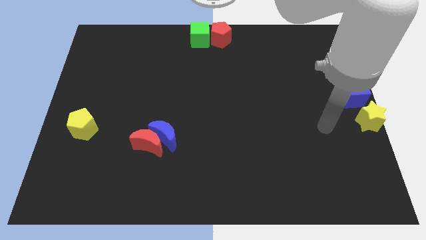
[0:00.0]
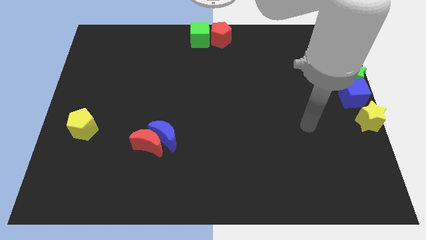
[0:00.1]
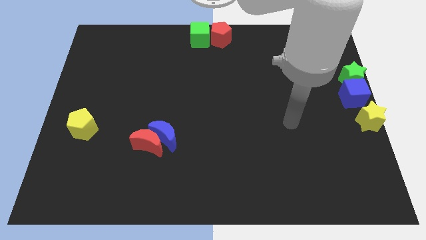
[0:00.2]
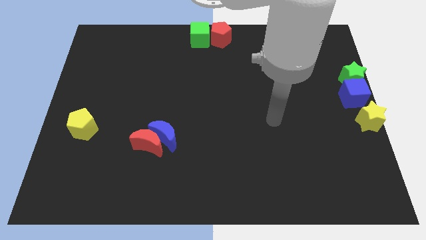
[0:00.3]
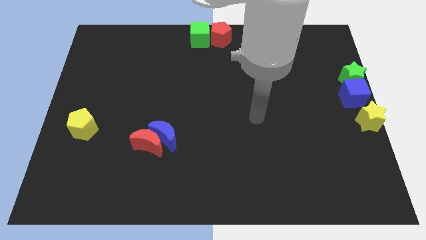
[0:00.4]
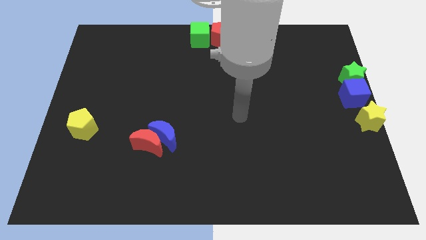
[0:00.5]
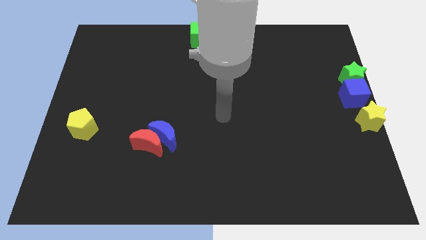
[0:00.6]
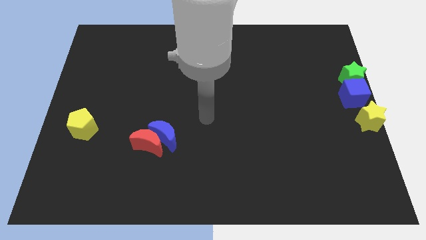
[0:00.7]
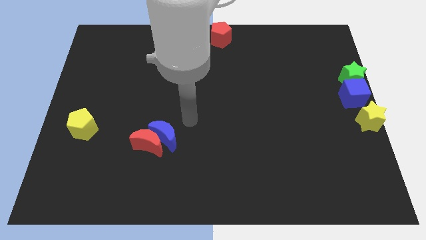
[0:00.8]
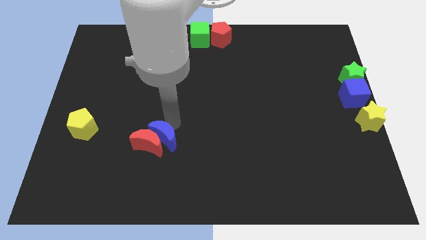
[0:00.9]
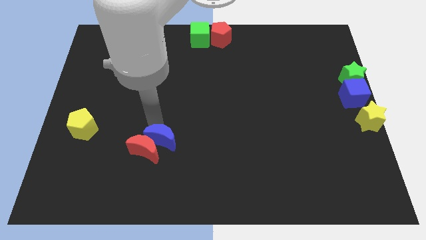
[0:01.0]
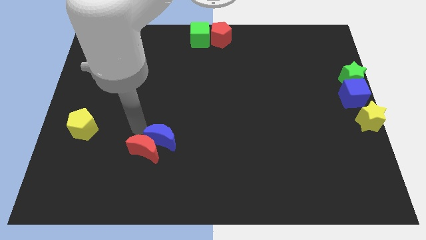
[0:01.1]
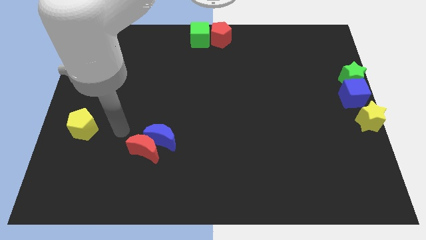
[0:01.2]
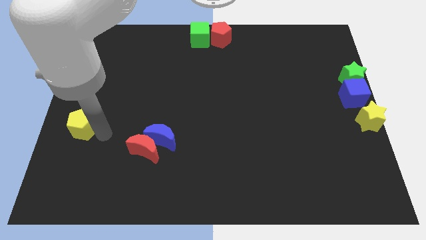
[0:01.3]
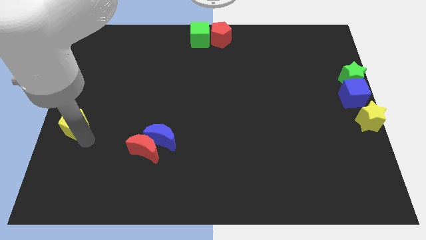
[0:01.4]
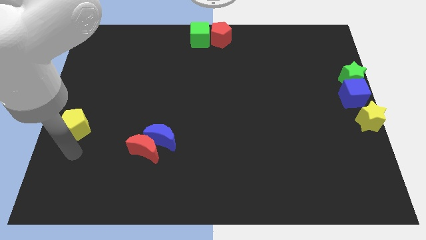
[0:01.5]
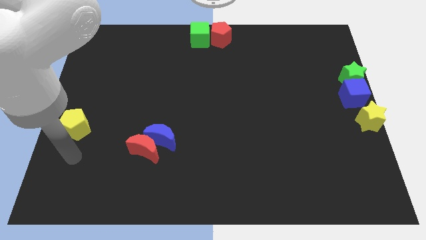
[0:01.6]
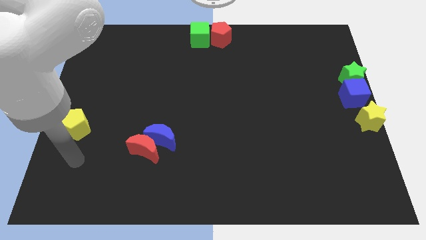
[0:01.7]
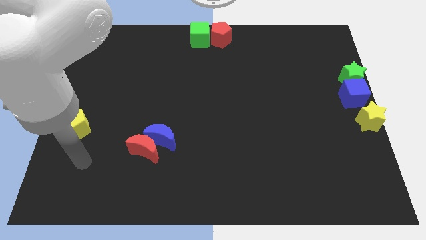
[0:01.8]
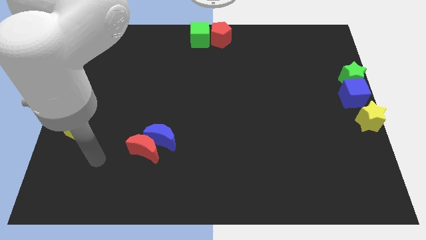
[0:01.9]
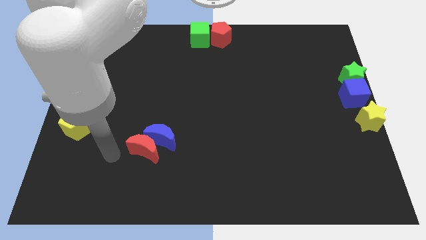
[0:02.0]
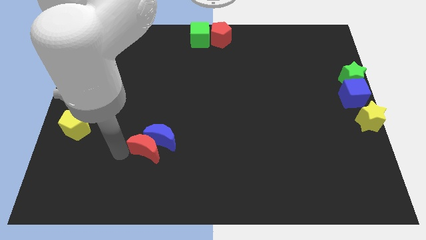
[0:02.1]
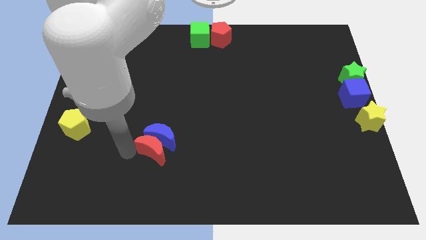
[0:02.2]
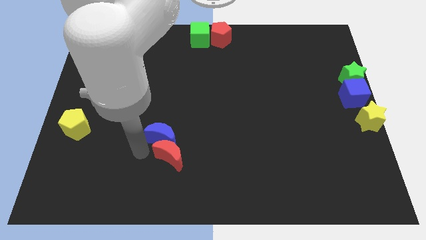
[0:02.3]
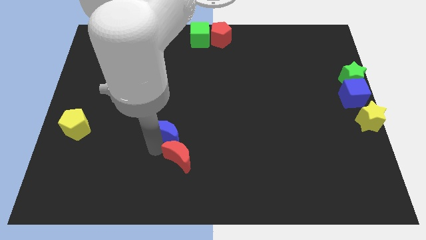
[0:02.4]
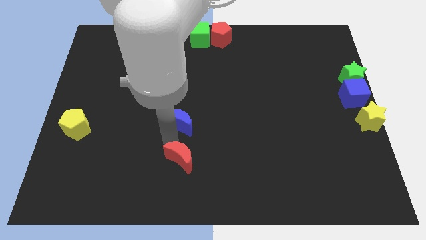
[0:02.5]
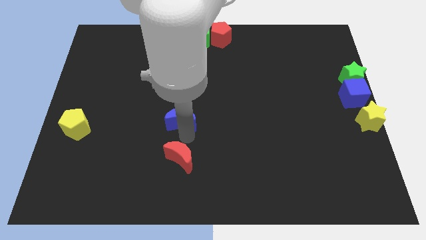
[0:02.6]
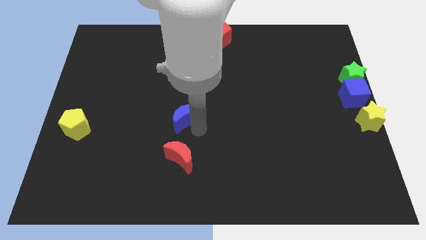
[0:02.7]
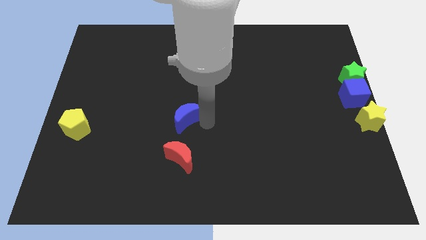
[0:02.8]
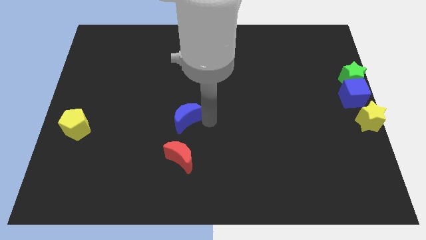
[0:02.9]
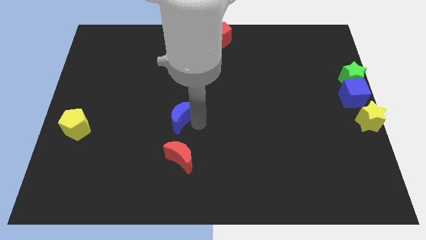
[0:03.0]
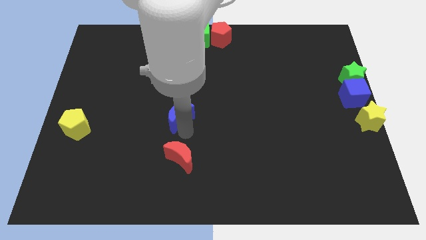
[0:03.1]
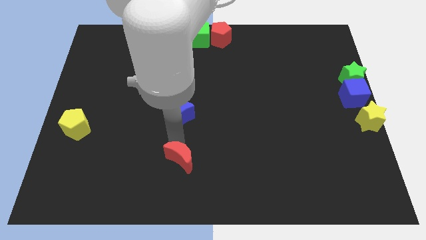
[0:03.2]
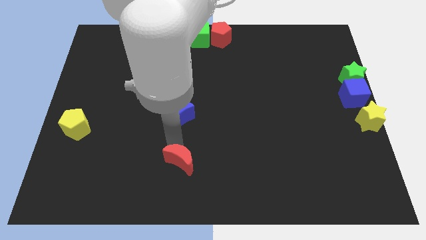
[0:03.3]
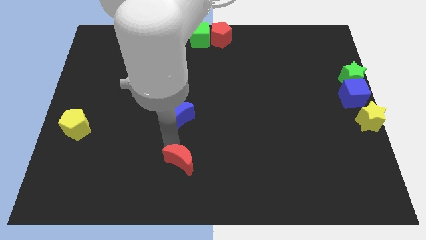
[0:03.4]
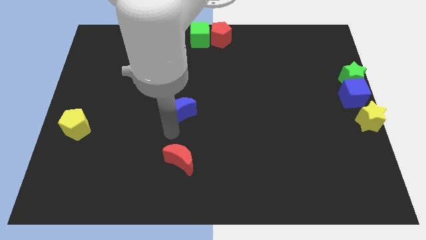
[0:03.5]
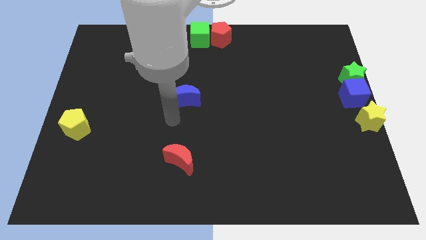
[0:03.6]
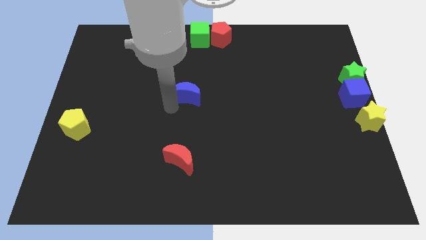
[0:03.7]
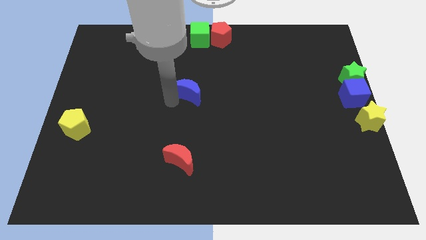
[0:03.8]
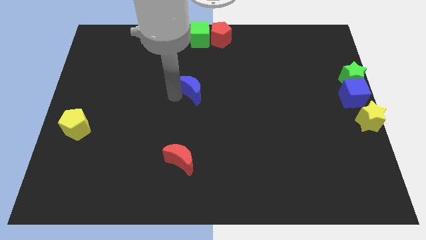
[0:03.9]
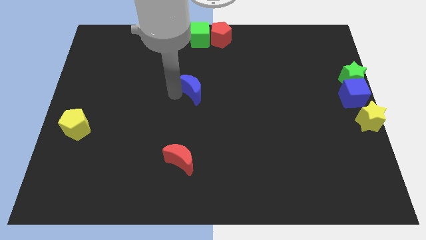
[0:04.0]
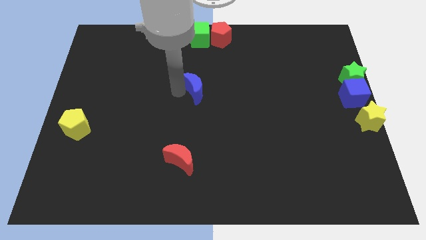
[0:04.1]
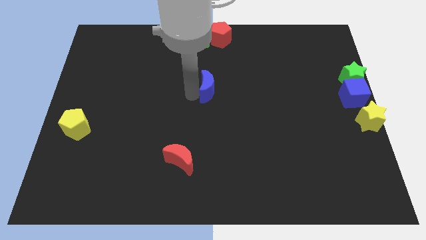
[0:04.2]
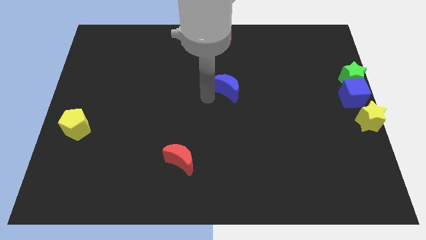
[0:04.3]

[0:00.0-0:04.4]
move the blue moon towards the center of the board

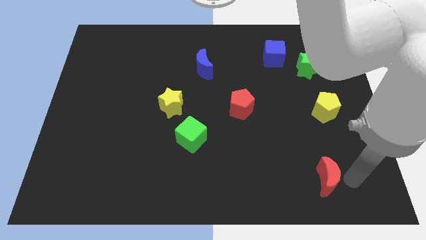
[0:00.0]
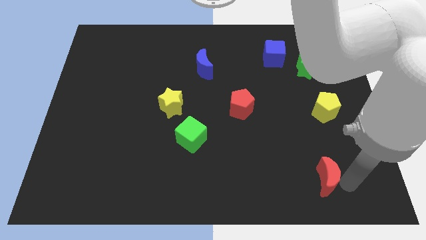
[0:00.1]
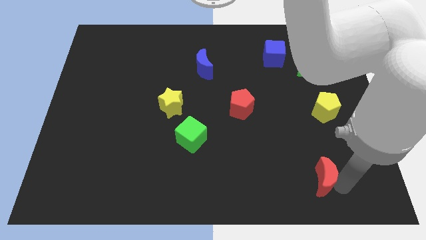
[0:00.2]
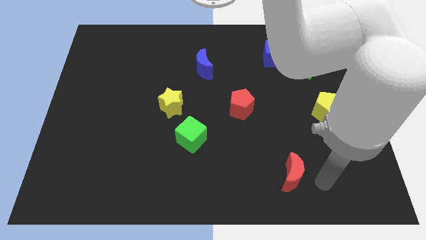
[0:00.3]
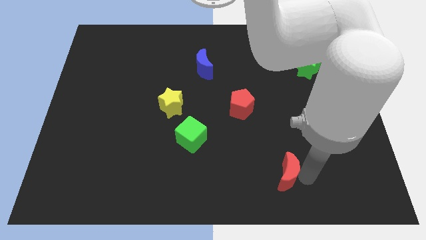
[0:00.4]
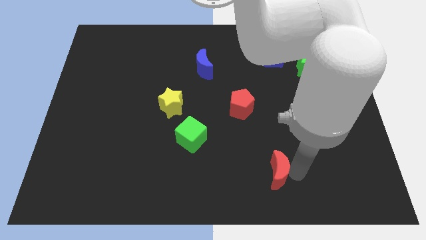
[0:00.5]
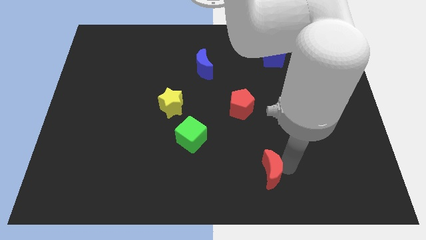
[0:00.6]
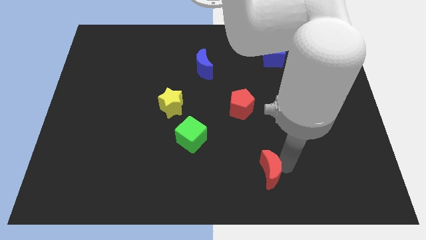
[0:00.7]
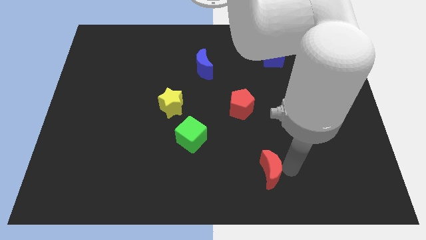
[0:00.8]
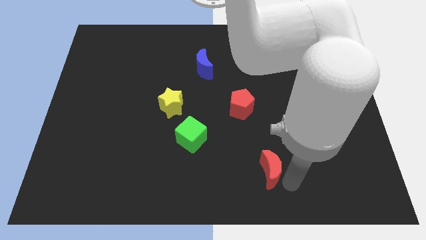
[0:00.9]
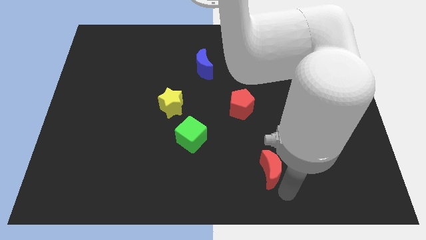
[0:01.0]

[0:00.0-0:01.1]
place the red moon below the red pentagon

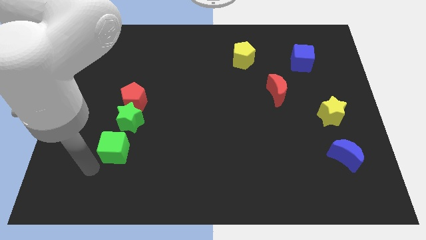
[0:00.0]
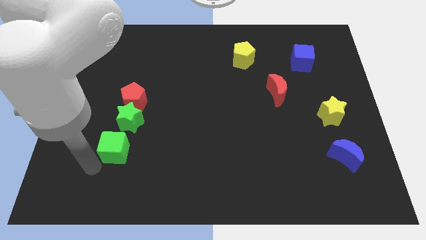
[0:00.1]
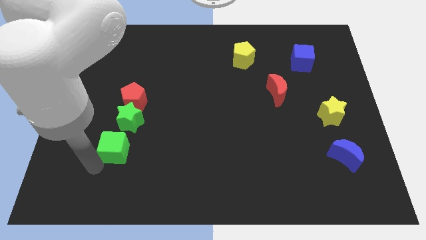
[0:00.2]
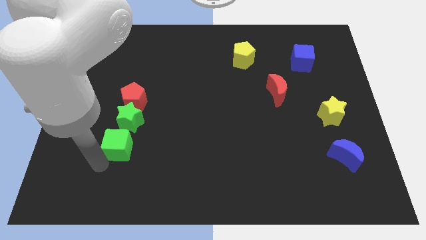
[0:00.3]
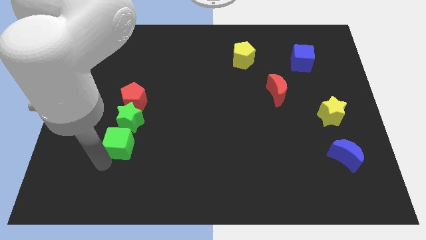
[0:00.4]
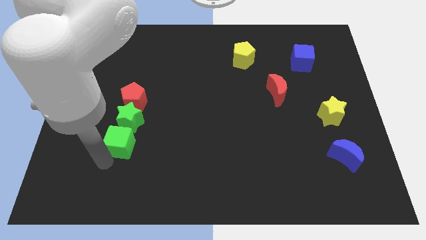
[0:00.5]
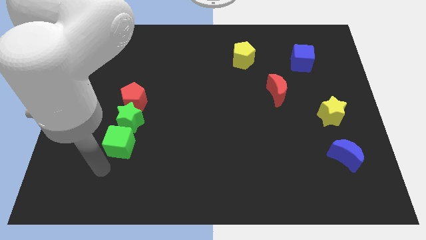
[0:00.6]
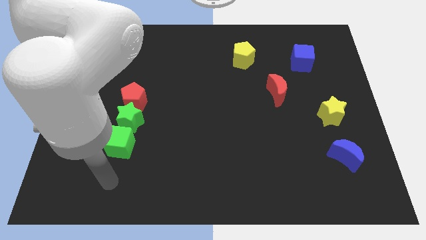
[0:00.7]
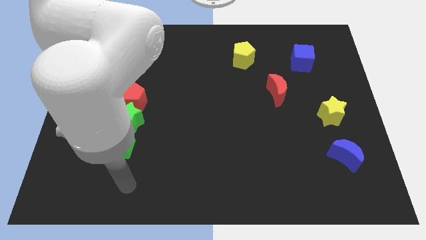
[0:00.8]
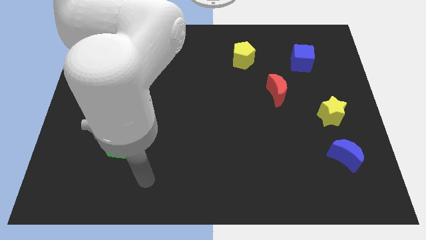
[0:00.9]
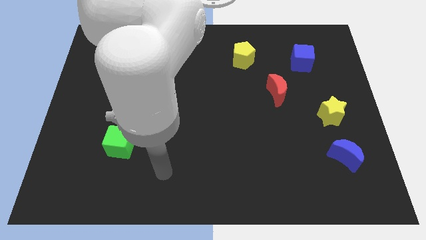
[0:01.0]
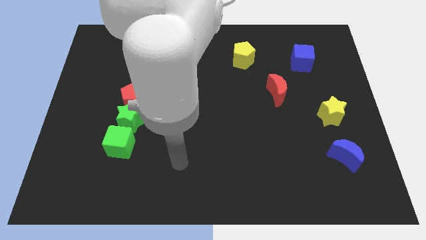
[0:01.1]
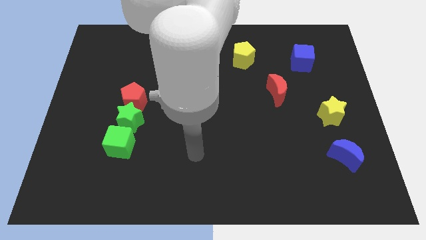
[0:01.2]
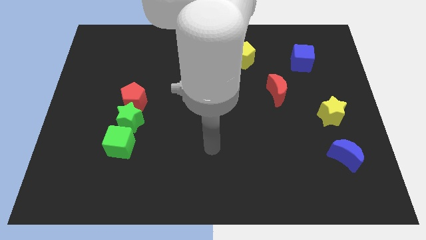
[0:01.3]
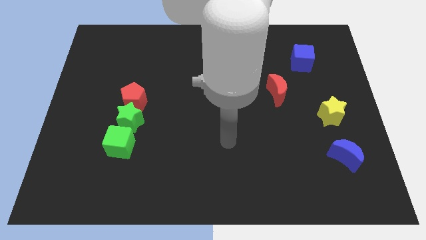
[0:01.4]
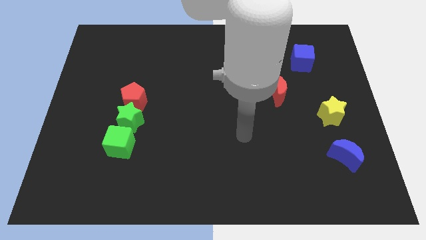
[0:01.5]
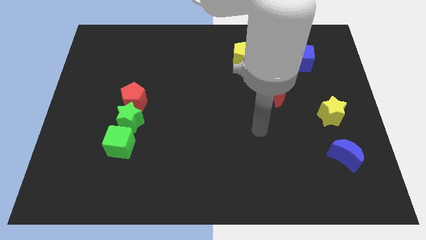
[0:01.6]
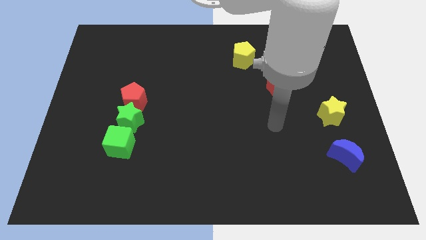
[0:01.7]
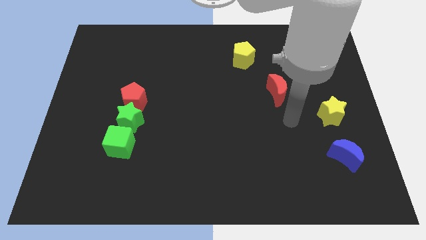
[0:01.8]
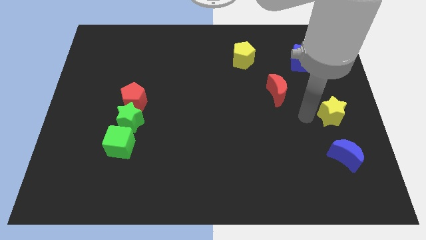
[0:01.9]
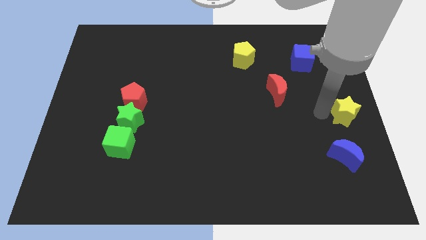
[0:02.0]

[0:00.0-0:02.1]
move the arm to the left of the yellow star

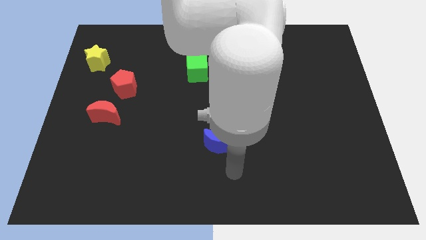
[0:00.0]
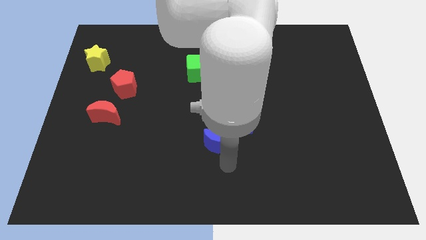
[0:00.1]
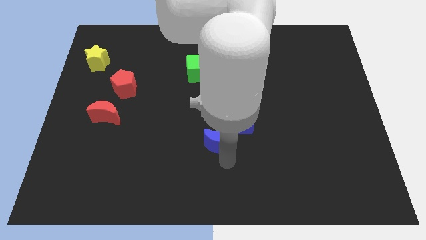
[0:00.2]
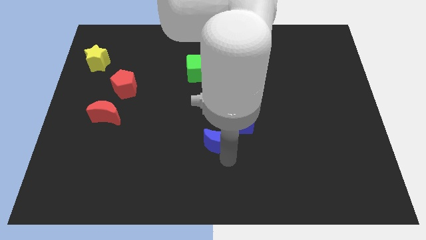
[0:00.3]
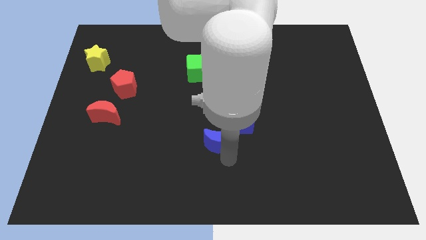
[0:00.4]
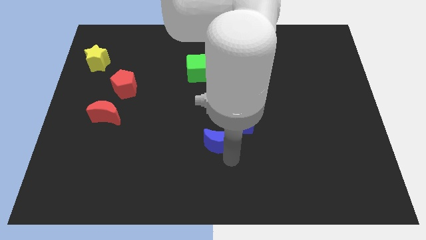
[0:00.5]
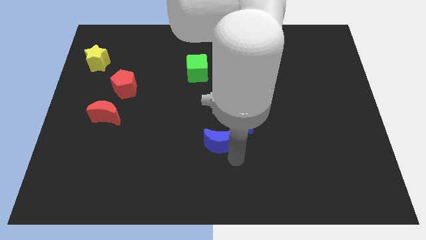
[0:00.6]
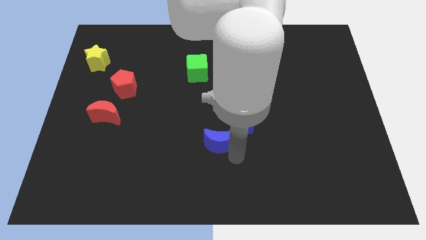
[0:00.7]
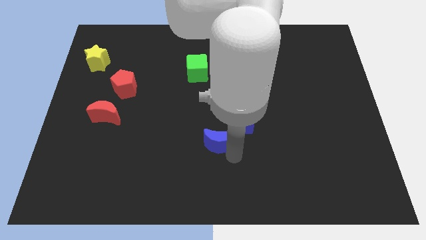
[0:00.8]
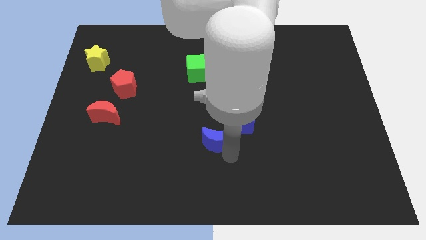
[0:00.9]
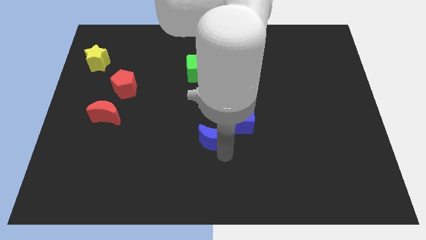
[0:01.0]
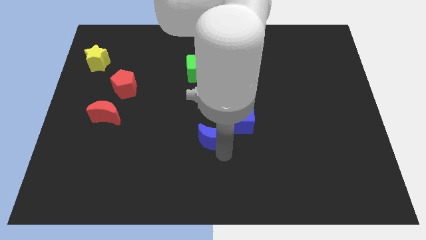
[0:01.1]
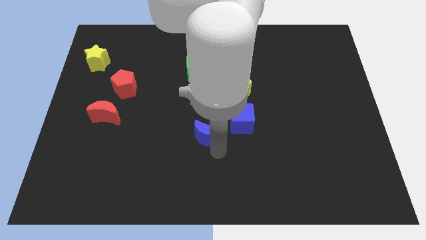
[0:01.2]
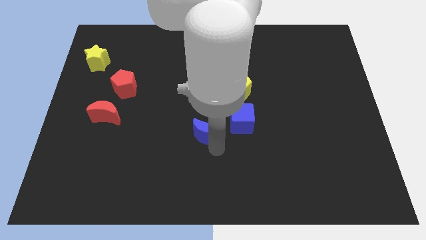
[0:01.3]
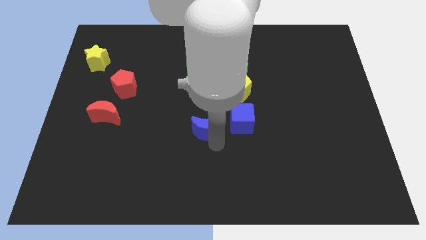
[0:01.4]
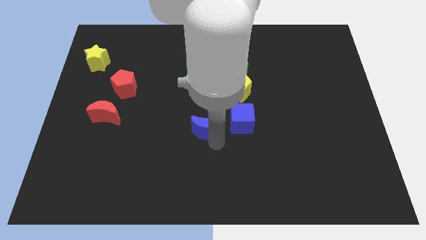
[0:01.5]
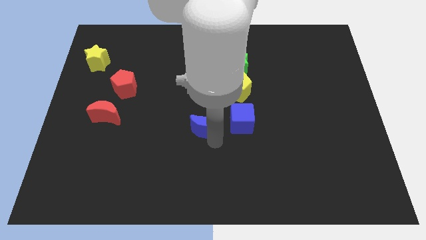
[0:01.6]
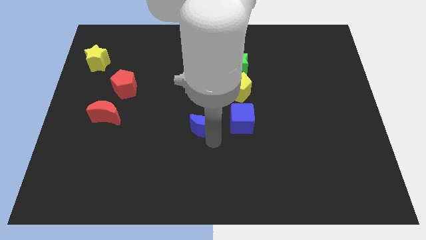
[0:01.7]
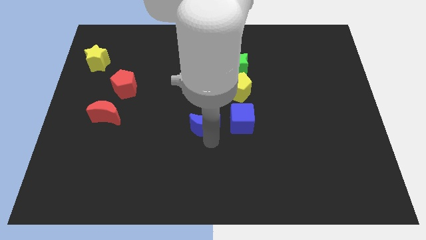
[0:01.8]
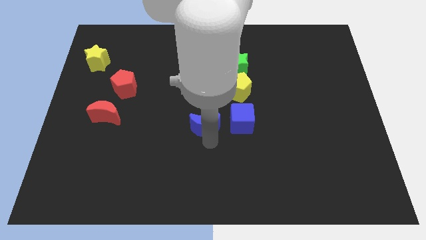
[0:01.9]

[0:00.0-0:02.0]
move the blue crescent slightly towards the top side
